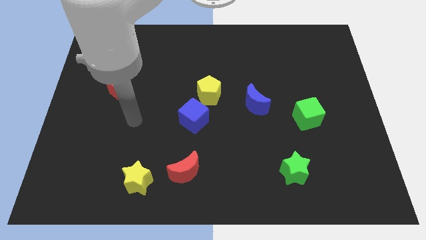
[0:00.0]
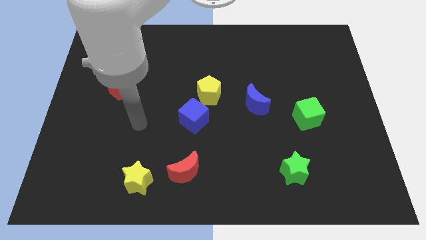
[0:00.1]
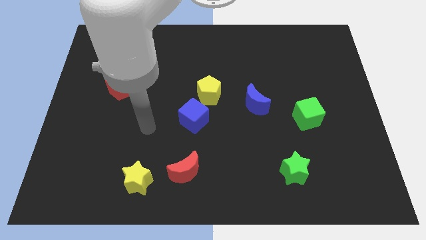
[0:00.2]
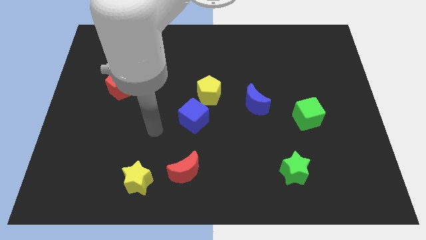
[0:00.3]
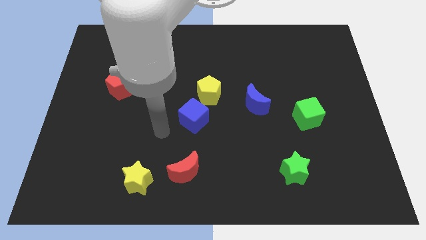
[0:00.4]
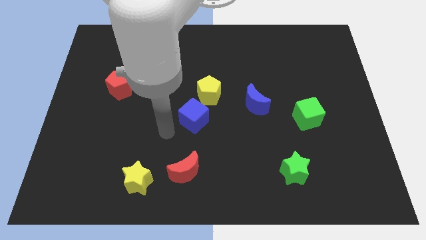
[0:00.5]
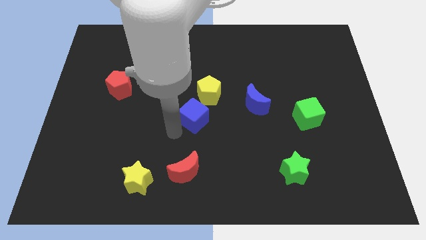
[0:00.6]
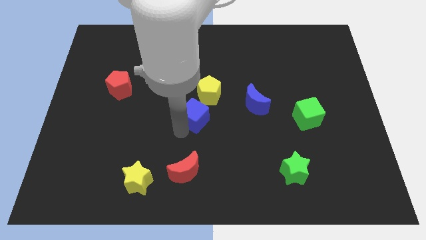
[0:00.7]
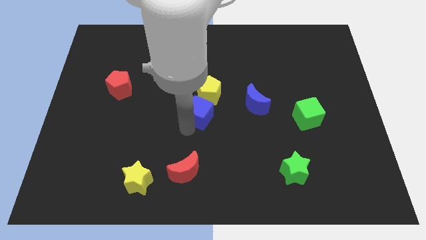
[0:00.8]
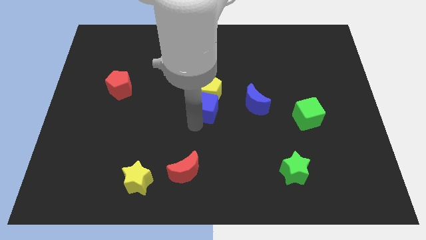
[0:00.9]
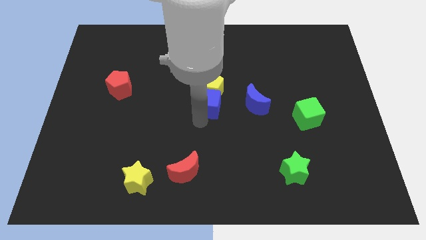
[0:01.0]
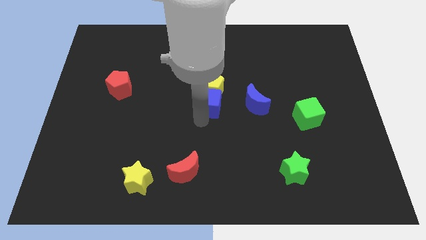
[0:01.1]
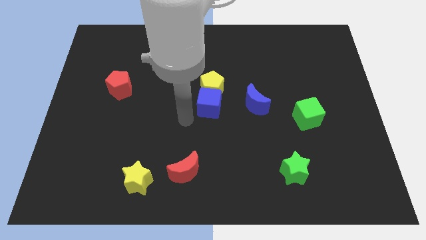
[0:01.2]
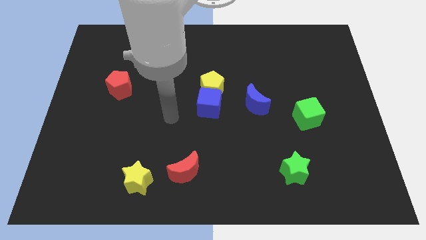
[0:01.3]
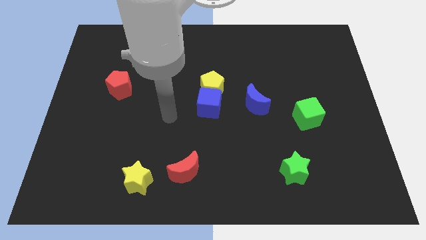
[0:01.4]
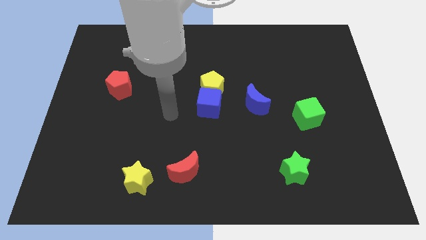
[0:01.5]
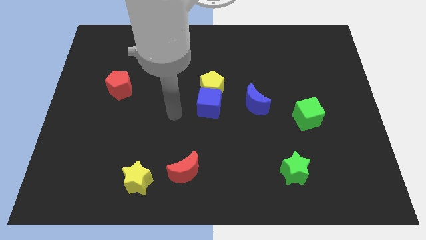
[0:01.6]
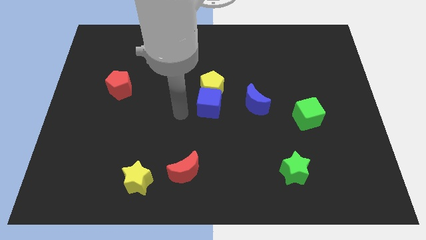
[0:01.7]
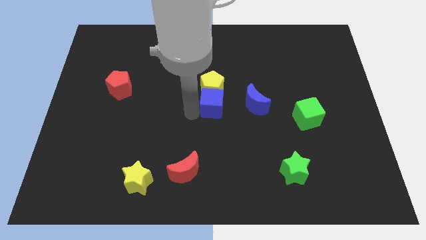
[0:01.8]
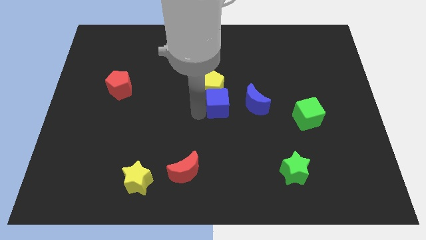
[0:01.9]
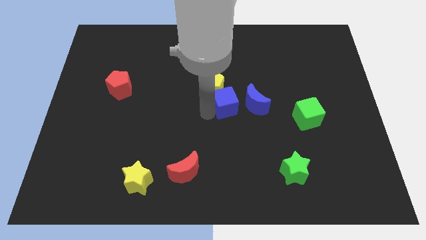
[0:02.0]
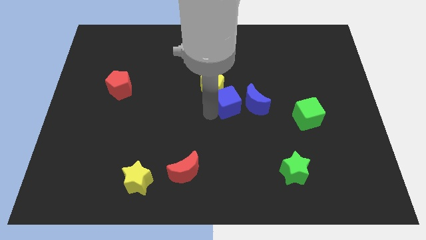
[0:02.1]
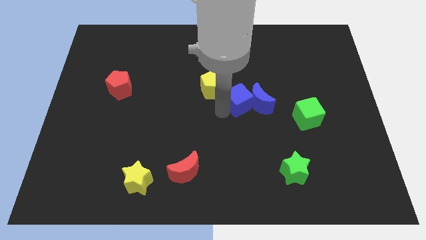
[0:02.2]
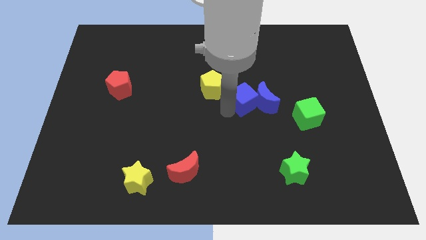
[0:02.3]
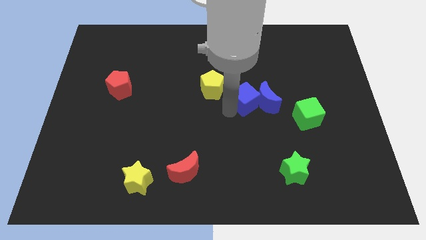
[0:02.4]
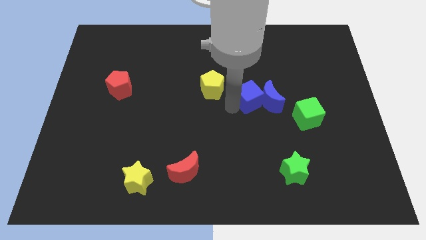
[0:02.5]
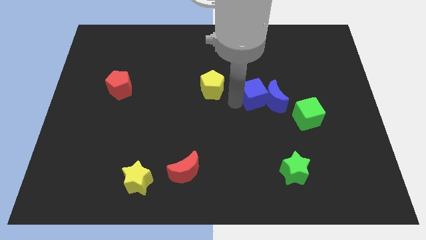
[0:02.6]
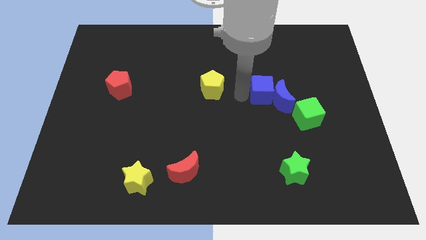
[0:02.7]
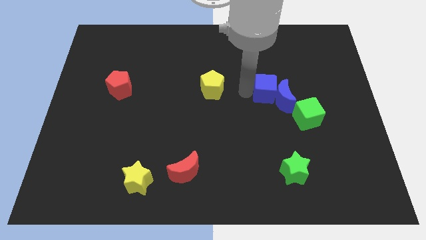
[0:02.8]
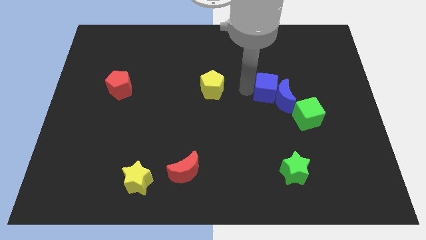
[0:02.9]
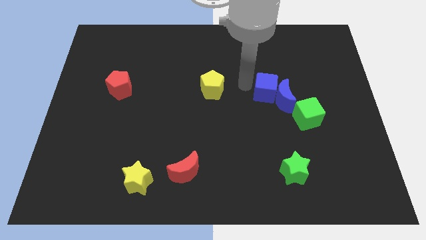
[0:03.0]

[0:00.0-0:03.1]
push blue cube in to blue crescent

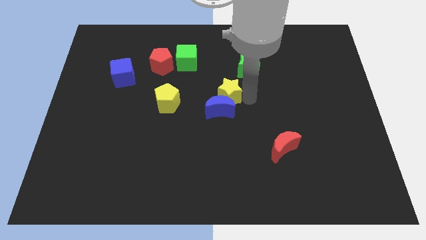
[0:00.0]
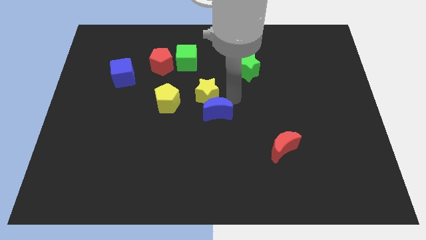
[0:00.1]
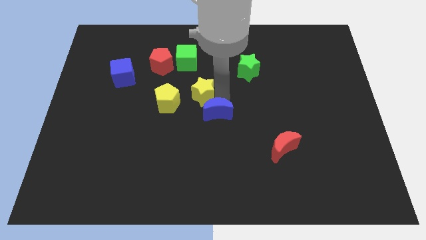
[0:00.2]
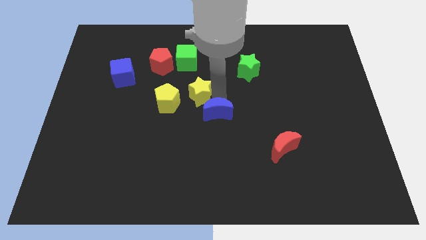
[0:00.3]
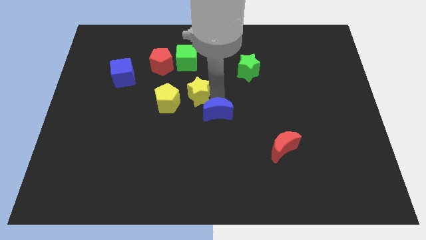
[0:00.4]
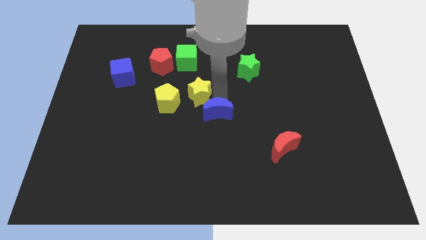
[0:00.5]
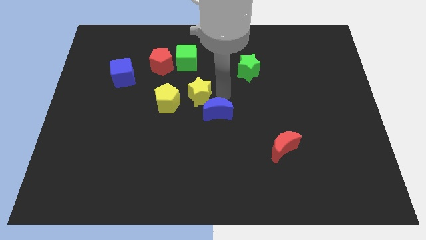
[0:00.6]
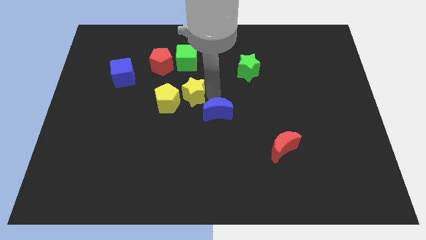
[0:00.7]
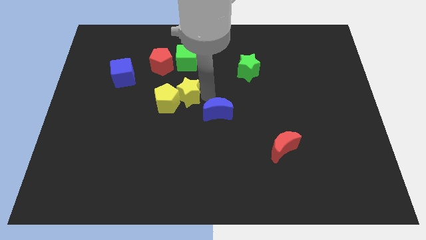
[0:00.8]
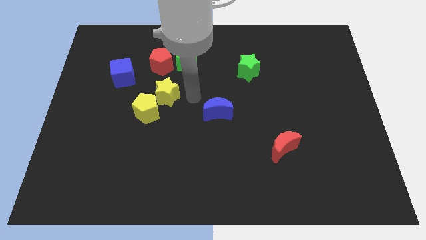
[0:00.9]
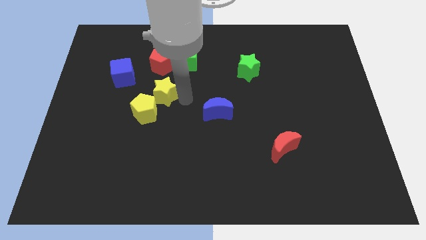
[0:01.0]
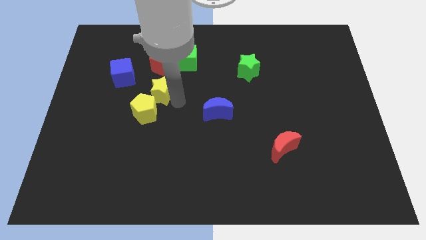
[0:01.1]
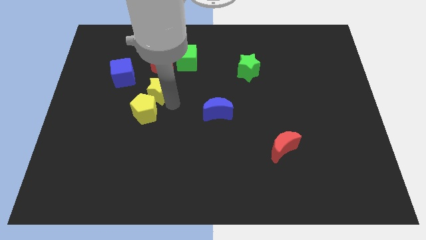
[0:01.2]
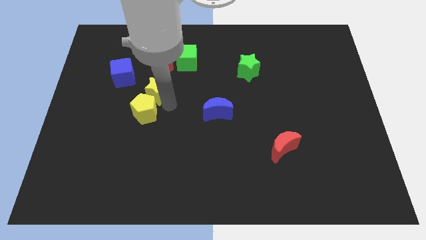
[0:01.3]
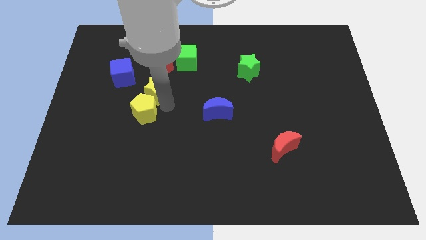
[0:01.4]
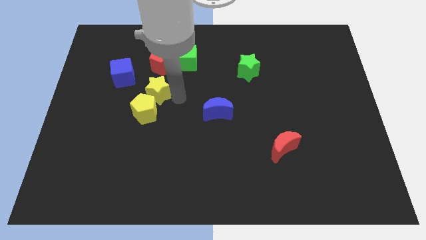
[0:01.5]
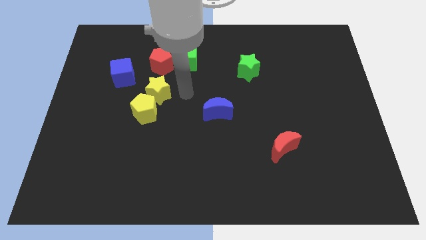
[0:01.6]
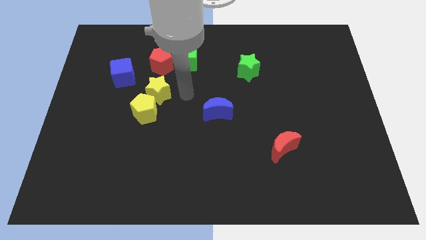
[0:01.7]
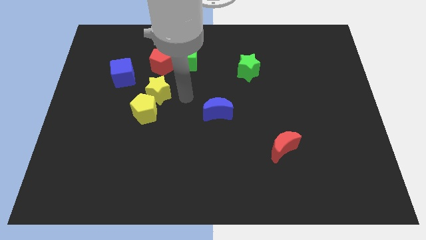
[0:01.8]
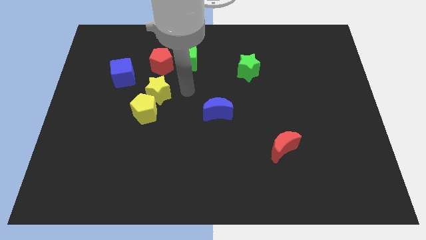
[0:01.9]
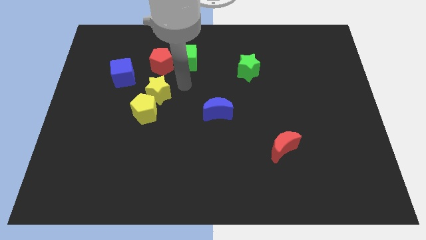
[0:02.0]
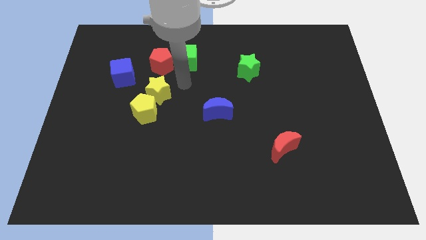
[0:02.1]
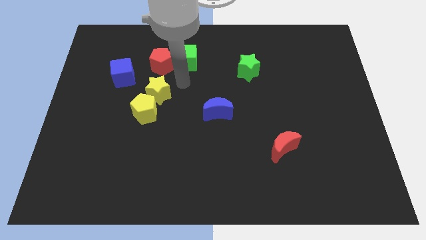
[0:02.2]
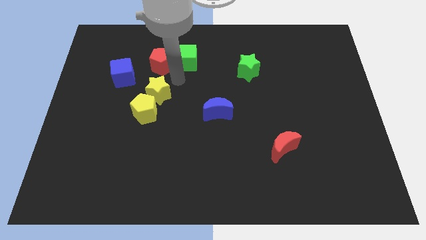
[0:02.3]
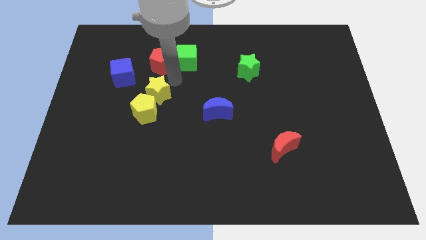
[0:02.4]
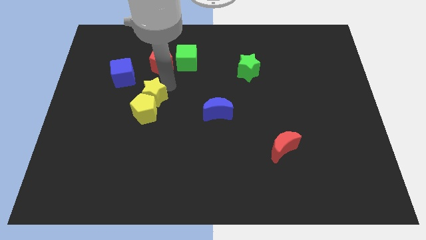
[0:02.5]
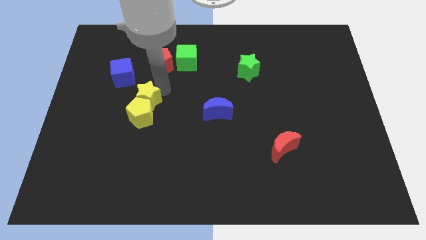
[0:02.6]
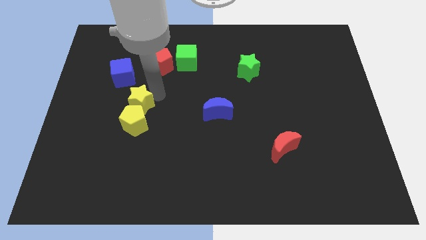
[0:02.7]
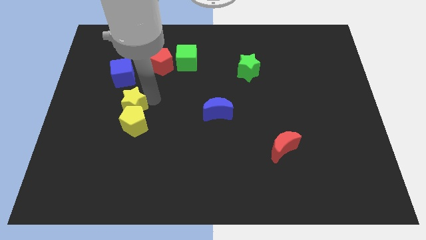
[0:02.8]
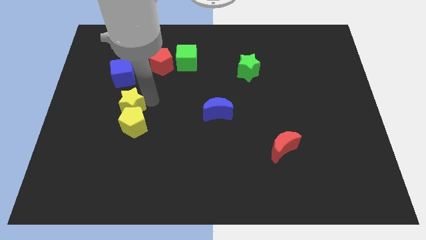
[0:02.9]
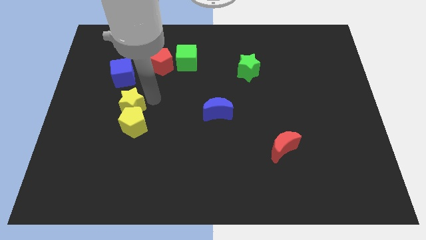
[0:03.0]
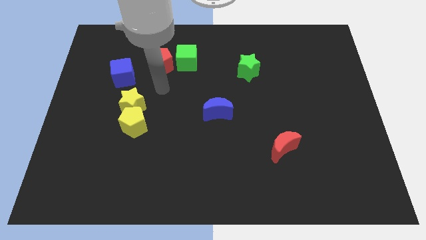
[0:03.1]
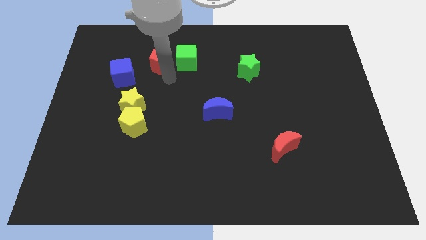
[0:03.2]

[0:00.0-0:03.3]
drag the yellow star into the yellow pentagon

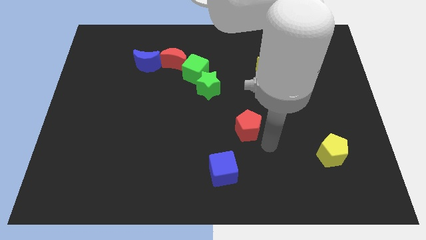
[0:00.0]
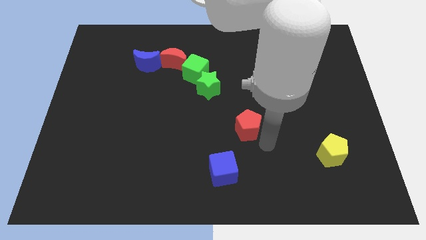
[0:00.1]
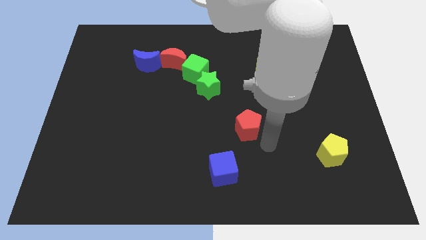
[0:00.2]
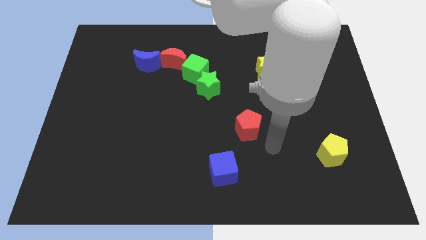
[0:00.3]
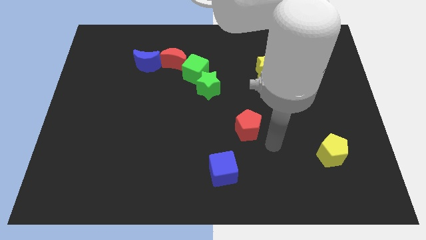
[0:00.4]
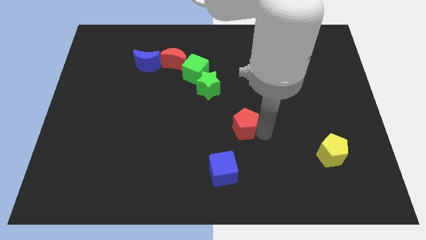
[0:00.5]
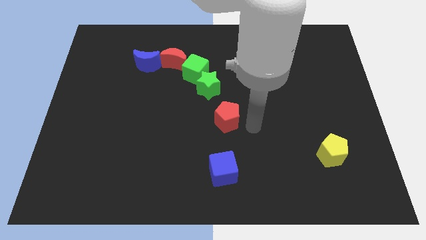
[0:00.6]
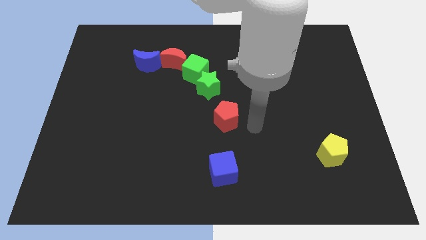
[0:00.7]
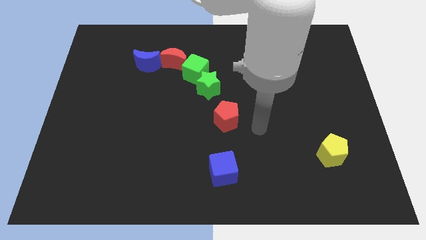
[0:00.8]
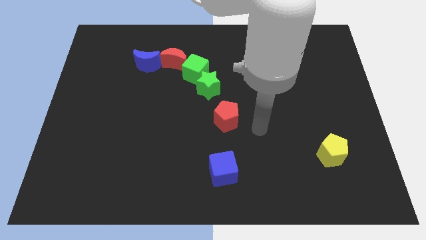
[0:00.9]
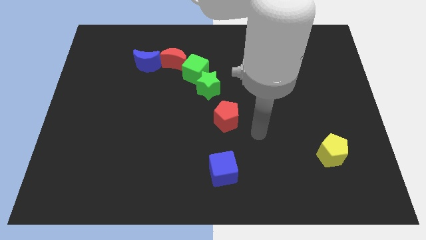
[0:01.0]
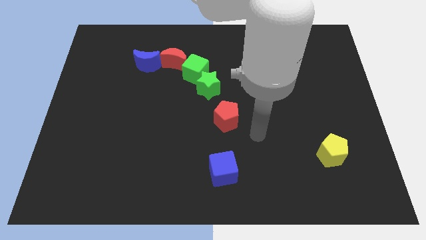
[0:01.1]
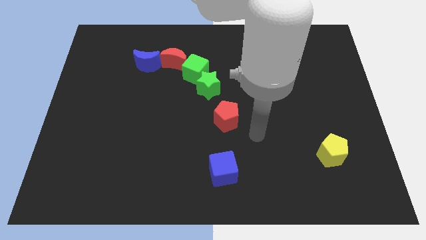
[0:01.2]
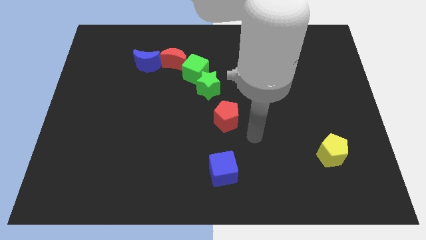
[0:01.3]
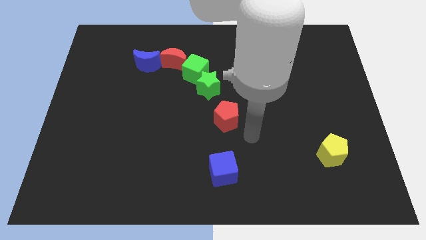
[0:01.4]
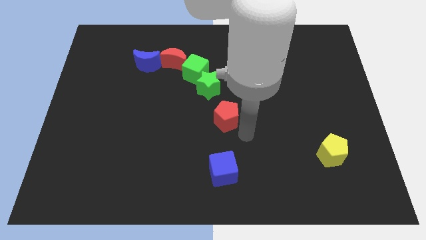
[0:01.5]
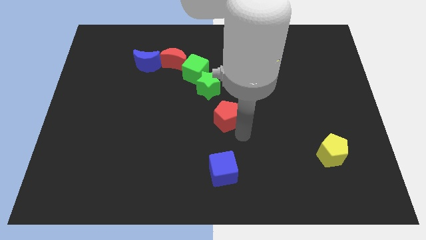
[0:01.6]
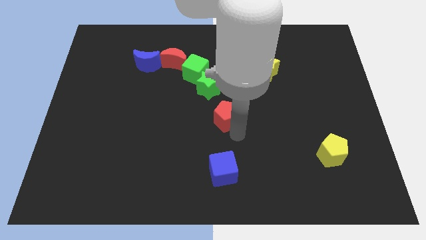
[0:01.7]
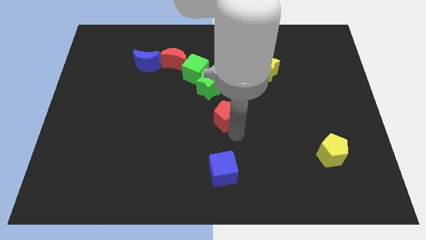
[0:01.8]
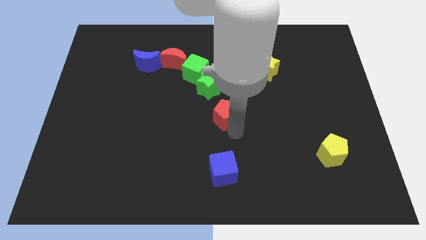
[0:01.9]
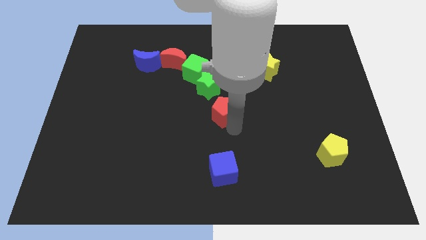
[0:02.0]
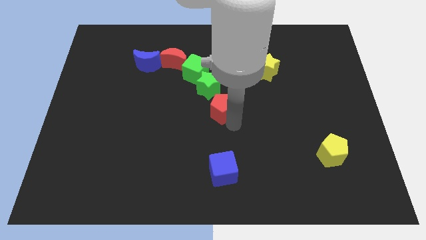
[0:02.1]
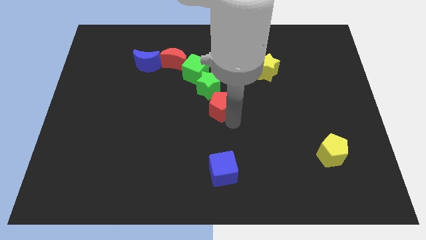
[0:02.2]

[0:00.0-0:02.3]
push the red pentagon into the green star
